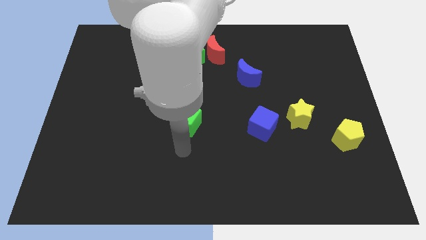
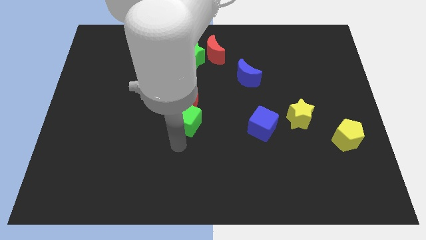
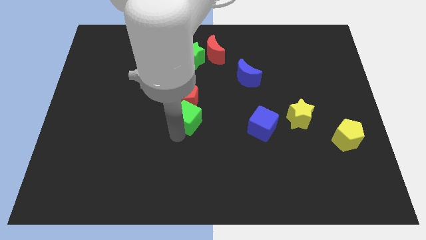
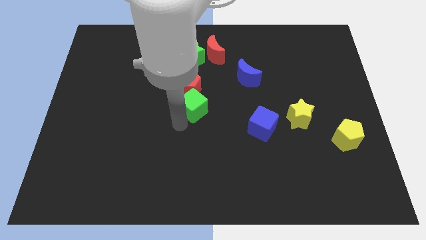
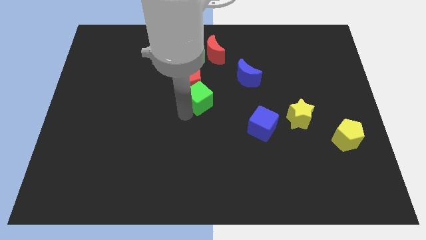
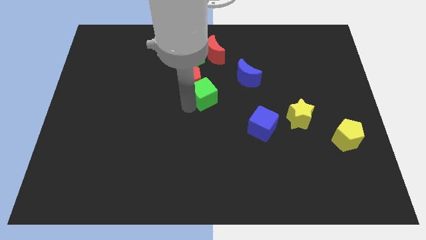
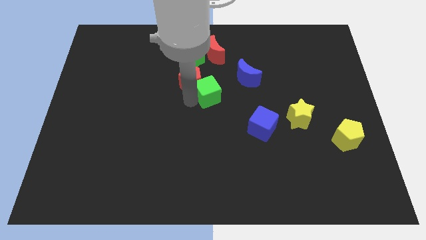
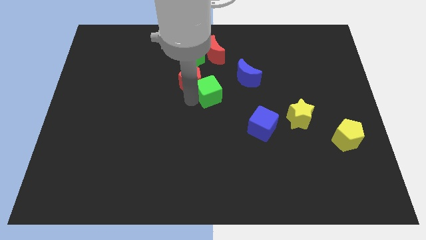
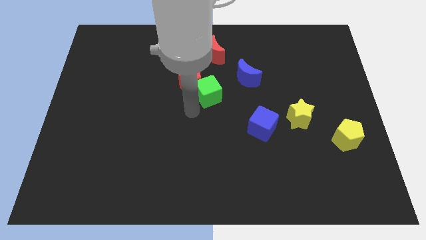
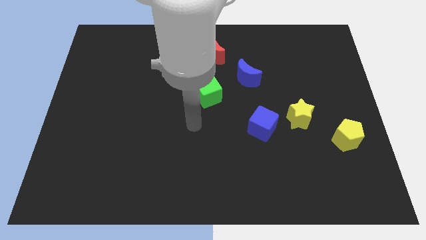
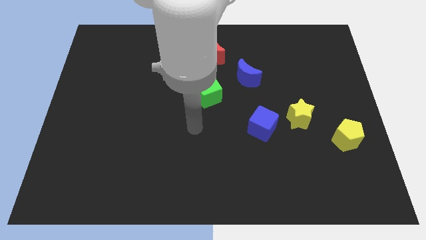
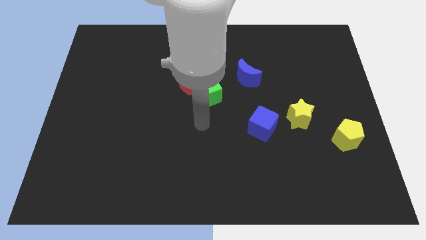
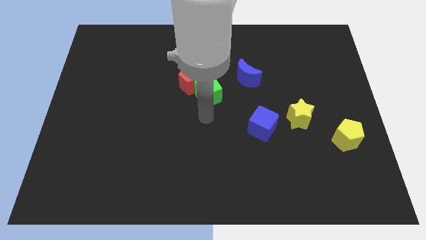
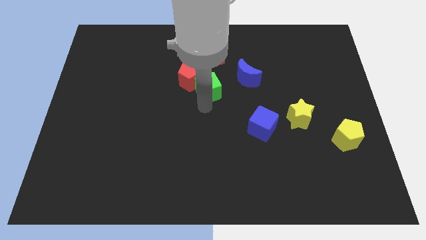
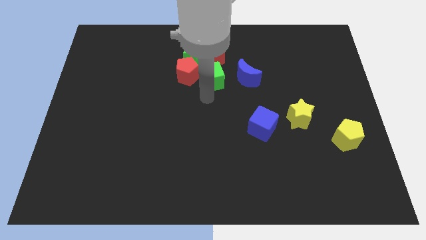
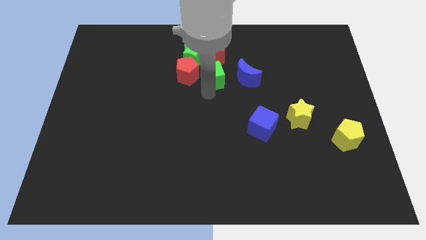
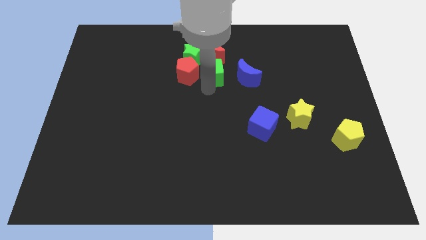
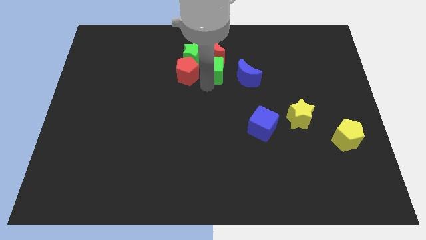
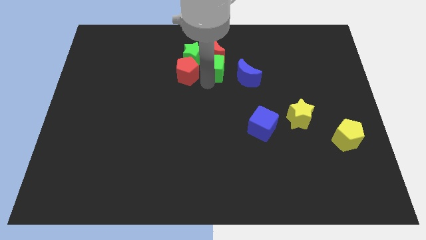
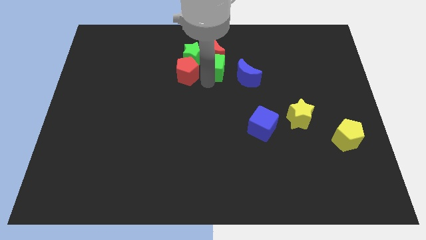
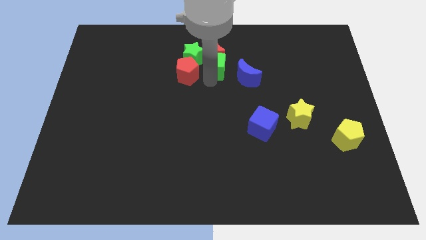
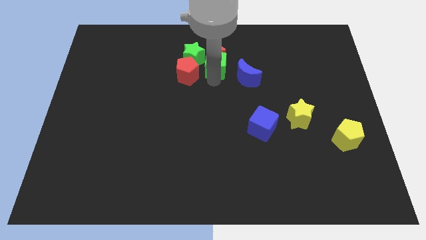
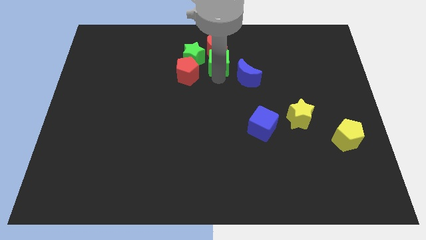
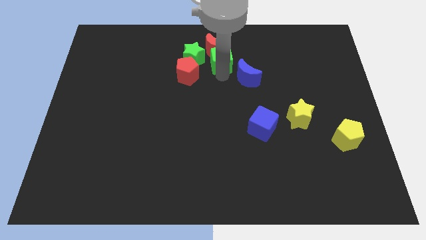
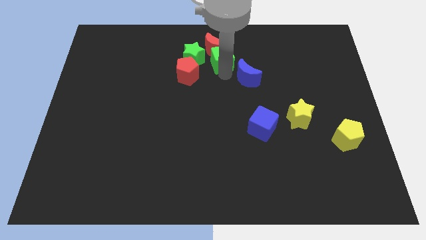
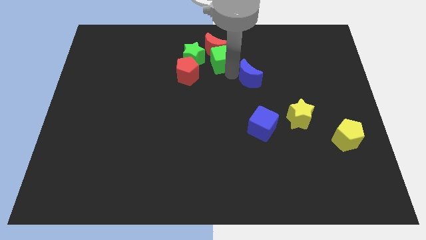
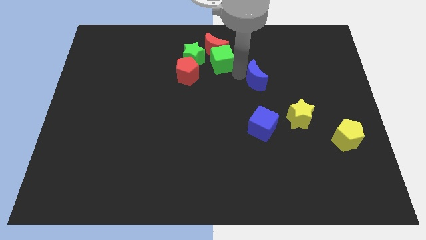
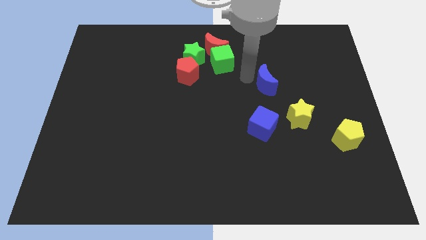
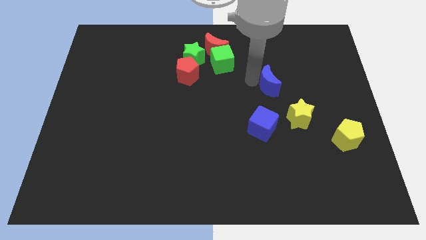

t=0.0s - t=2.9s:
move green cube down to the red moon

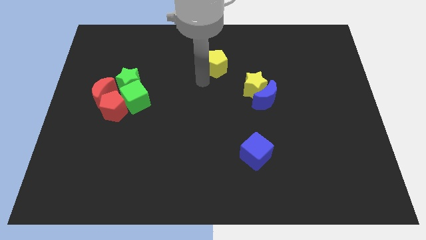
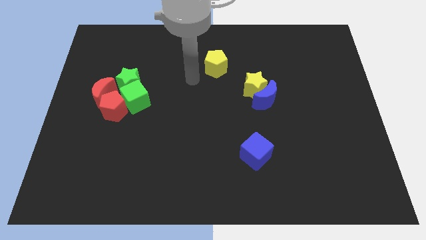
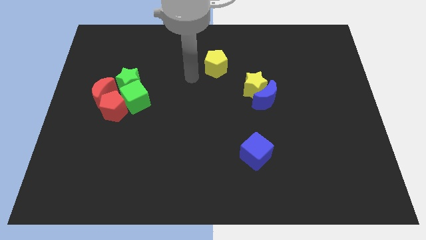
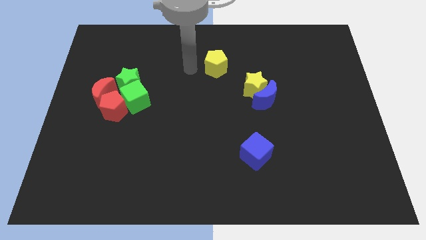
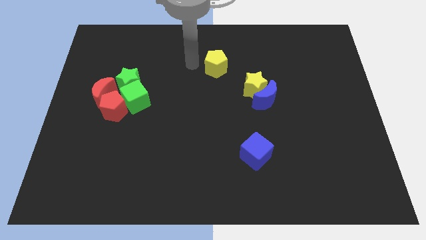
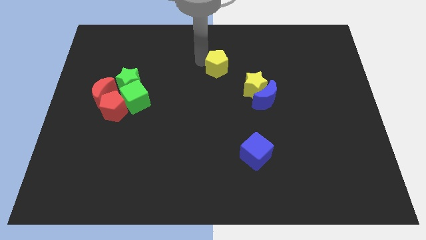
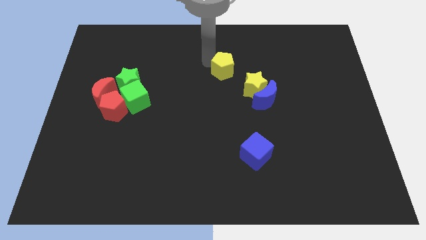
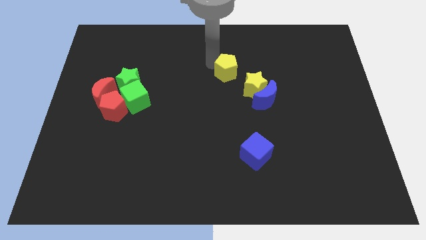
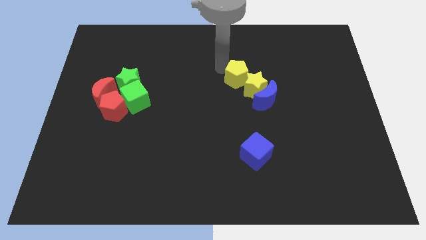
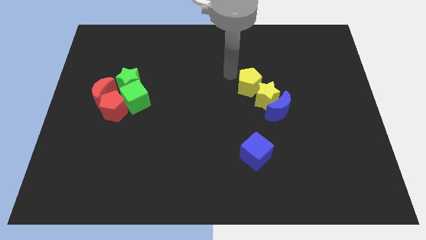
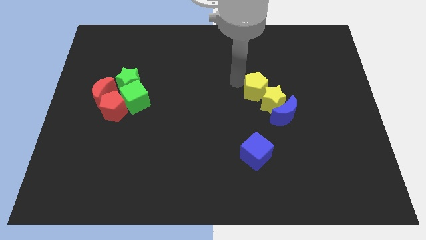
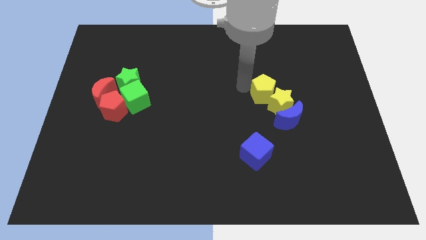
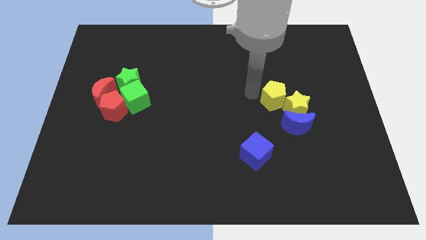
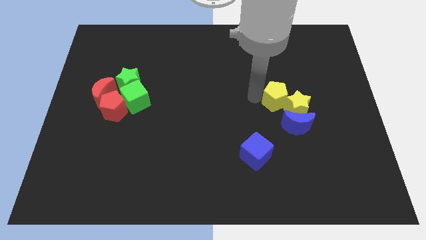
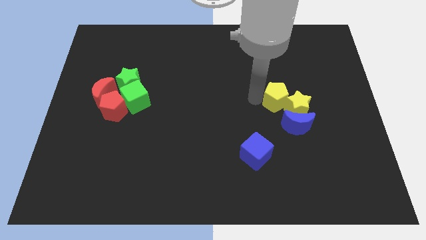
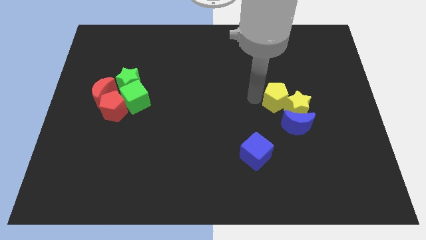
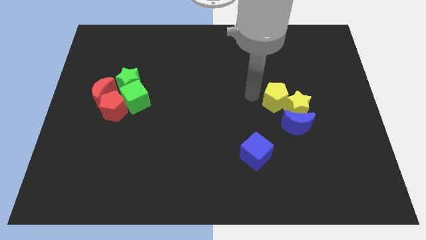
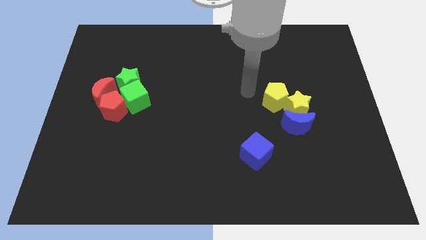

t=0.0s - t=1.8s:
push the yellow pentagon into the yellow star

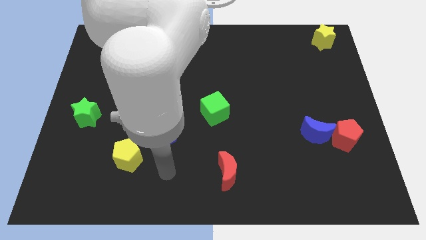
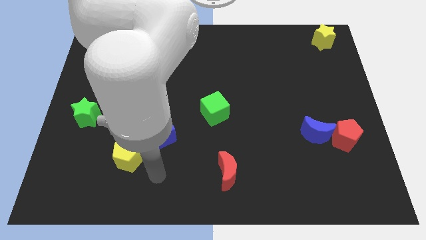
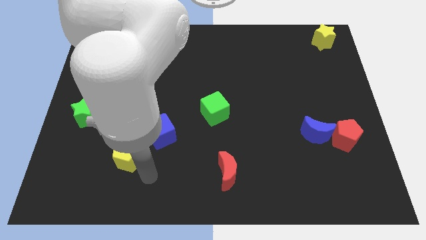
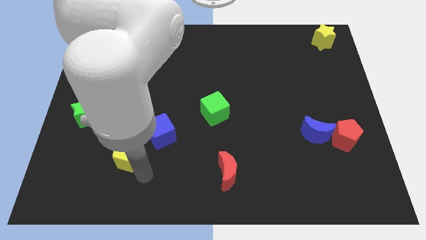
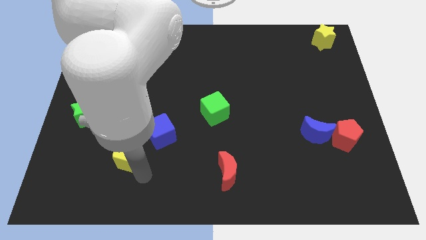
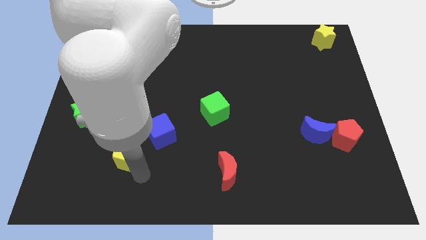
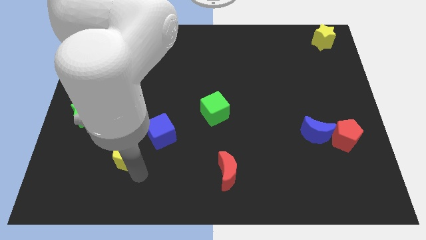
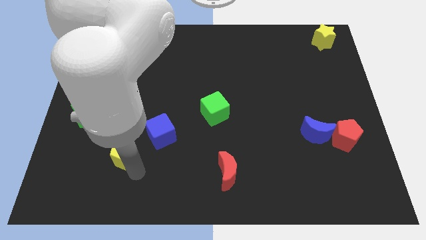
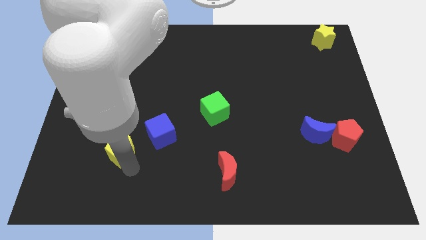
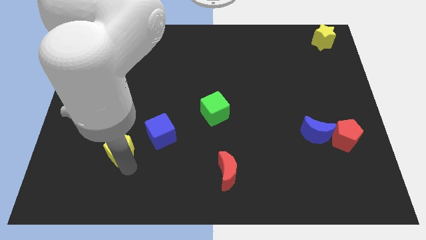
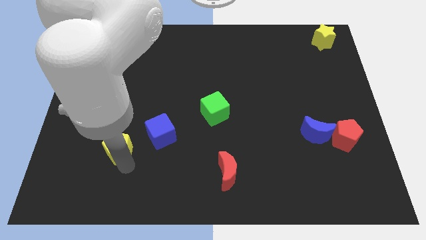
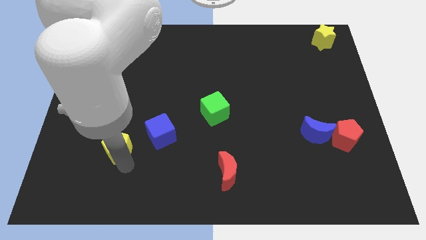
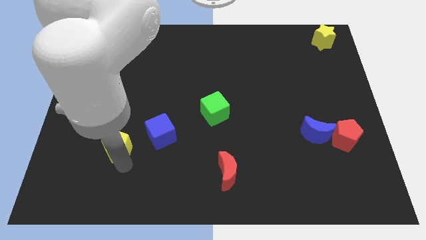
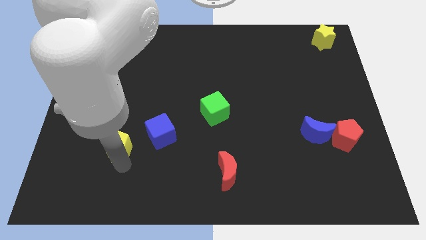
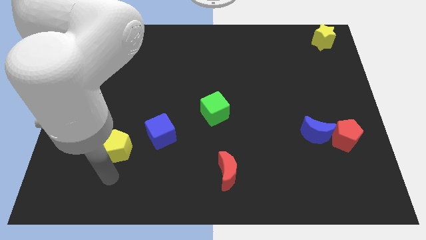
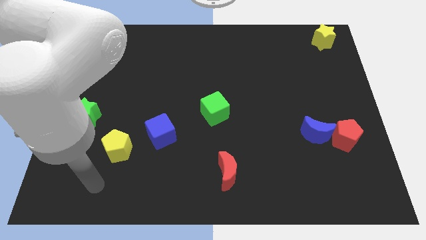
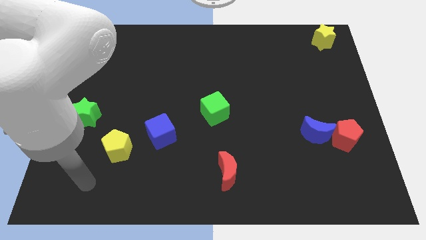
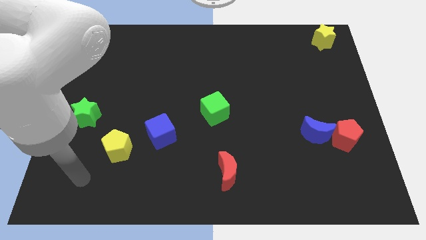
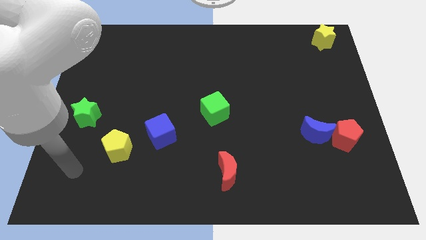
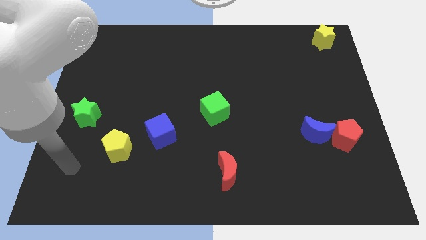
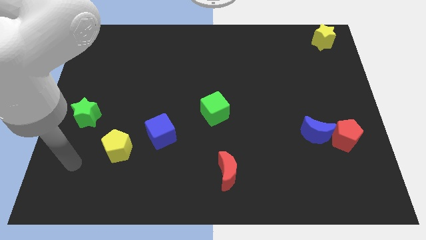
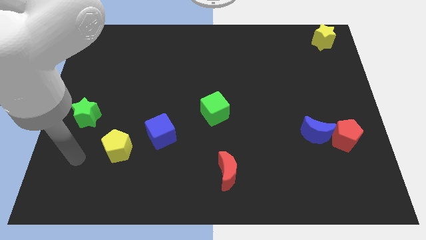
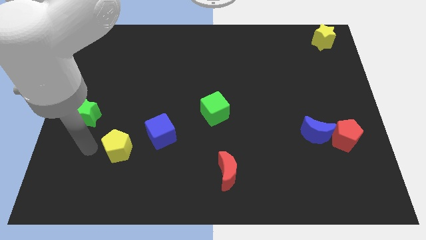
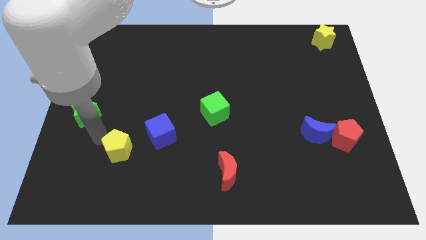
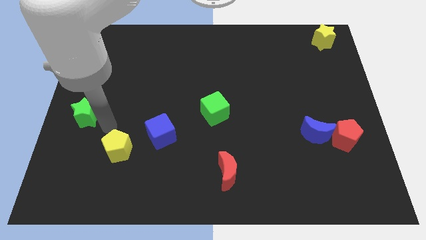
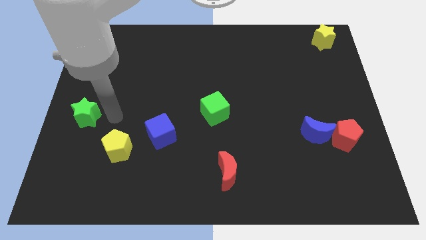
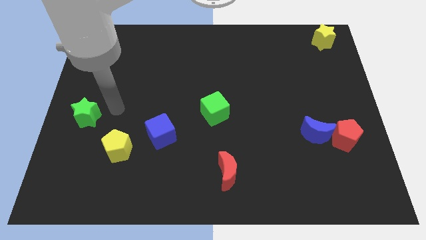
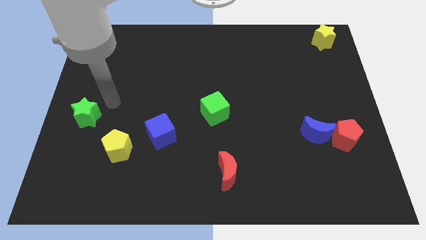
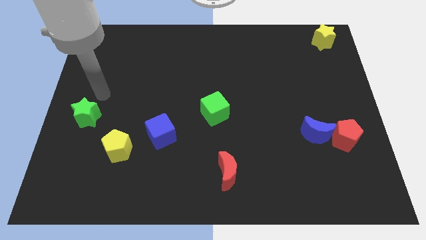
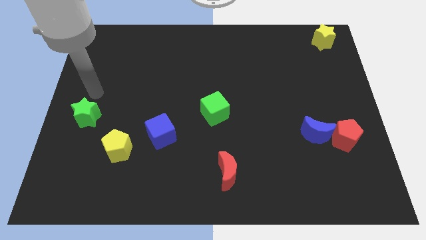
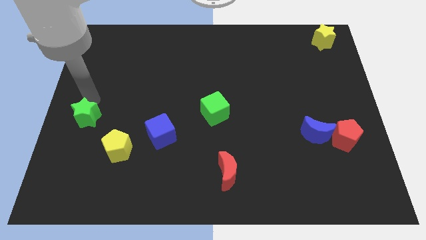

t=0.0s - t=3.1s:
push yellow pentagon to the bottom left of blue cube

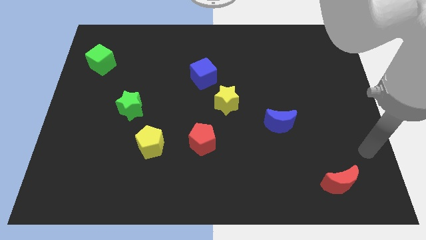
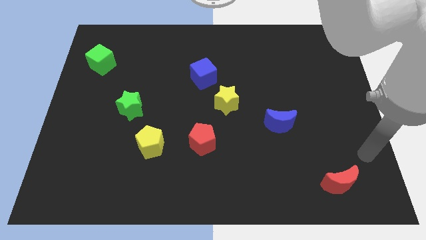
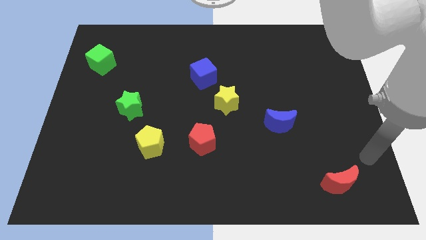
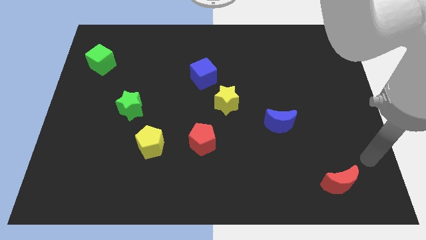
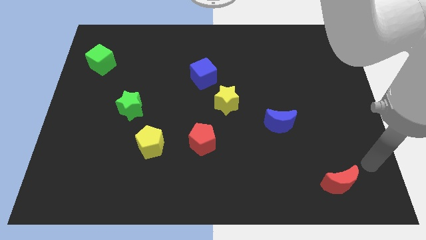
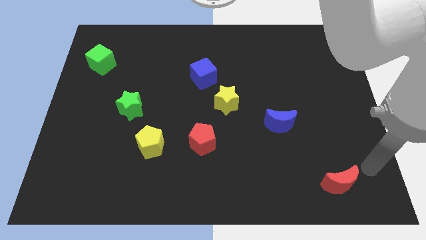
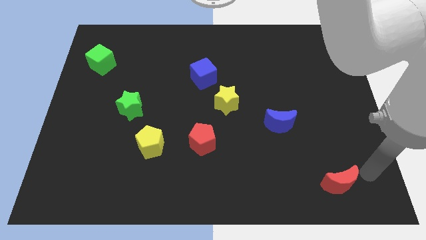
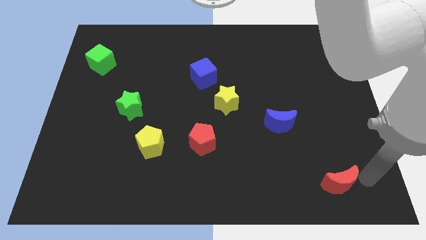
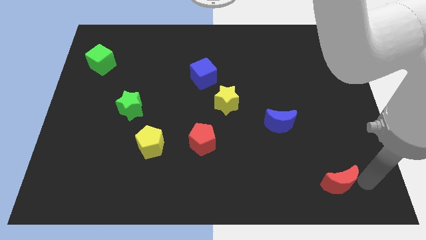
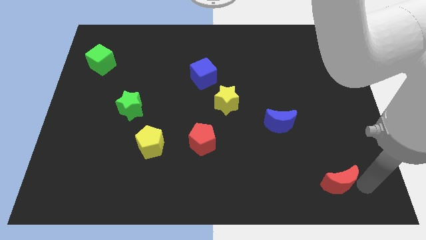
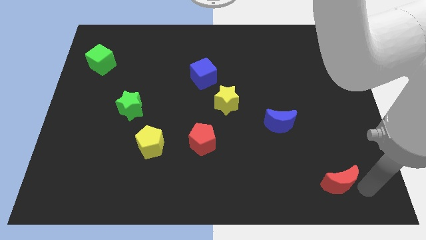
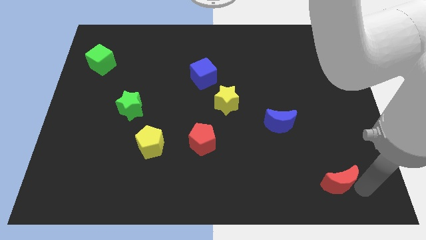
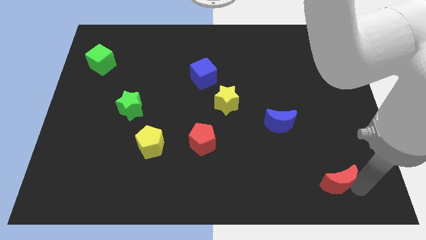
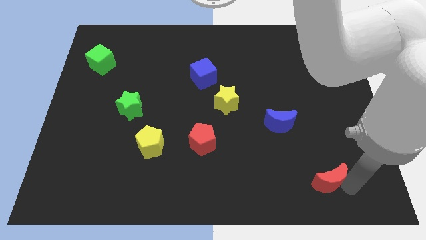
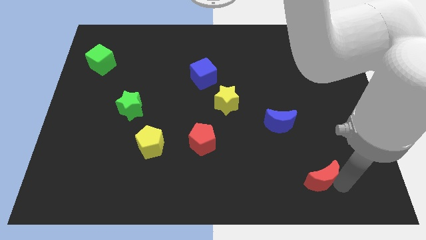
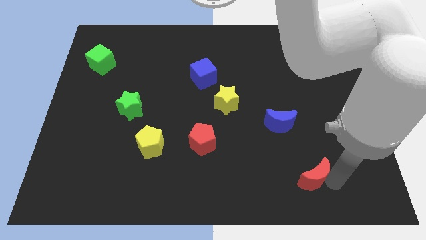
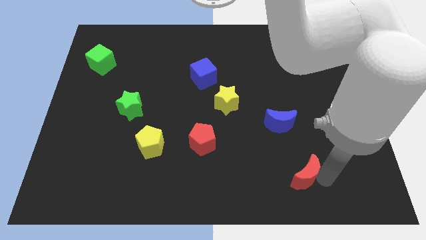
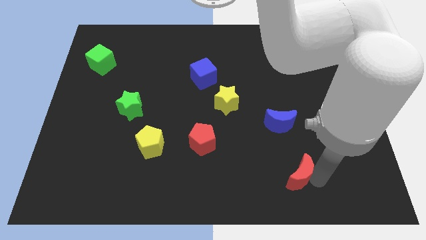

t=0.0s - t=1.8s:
push the red crescent to the left of the board
